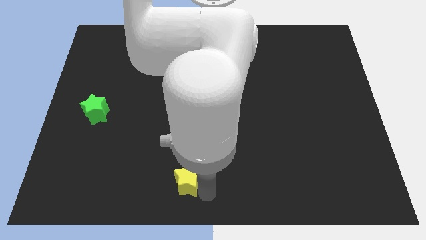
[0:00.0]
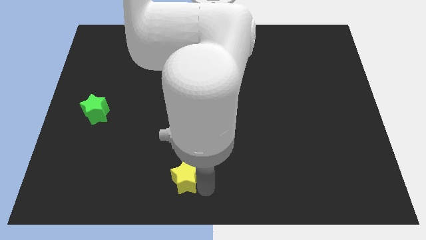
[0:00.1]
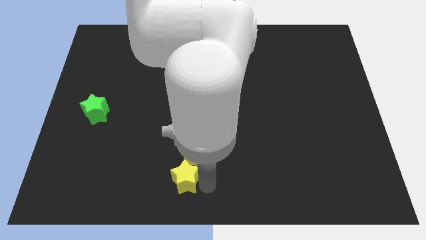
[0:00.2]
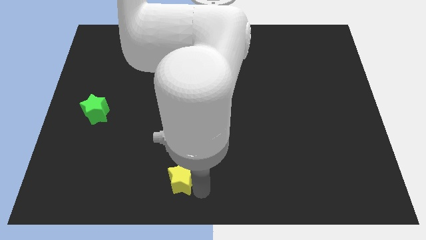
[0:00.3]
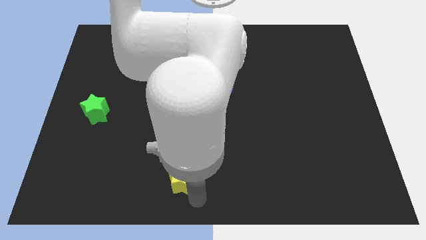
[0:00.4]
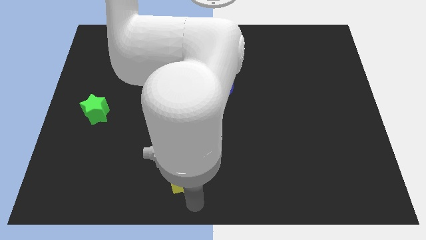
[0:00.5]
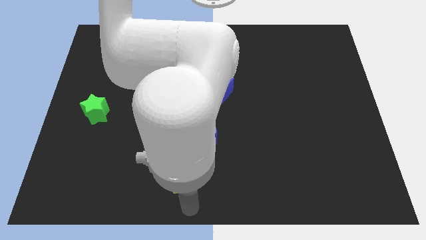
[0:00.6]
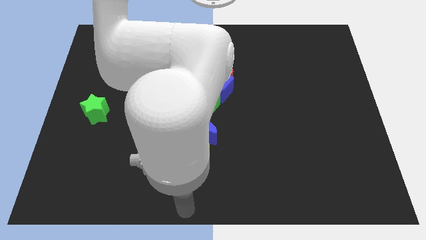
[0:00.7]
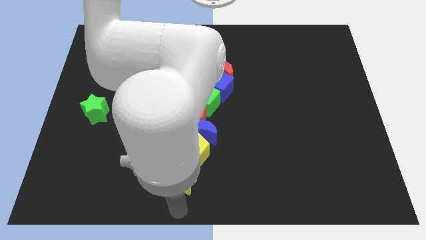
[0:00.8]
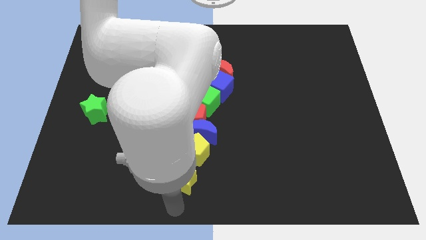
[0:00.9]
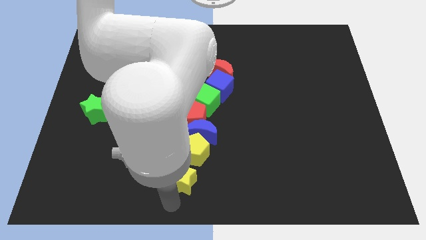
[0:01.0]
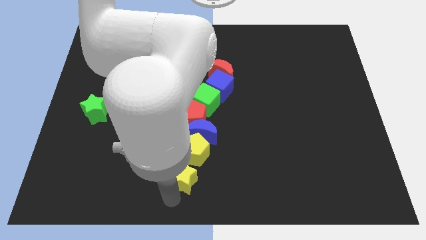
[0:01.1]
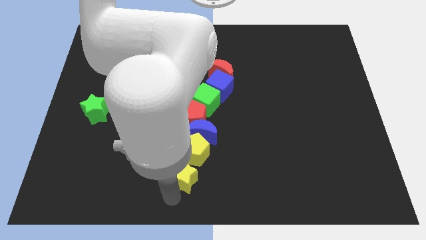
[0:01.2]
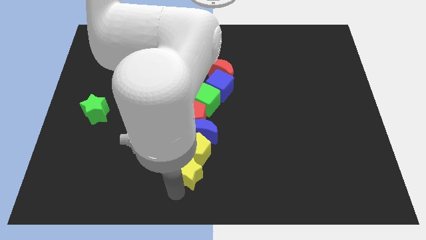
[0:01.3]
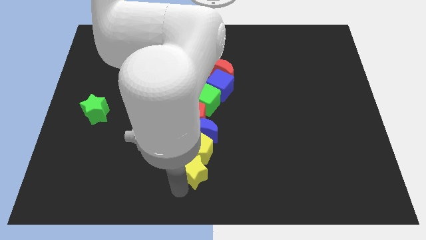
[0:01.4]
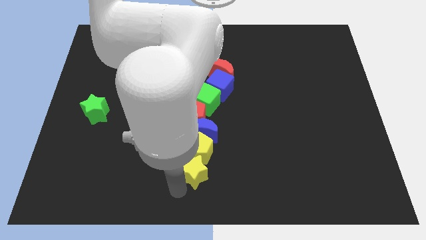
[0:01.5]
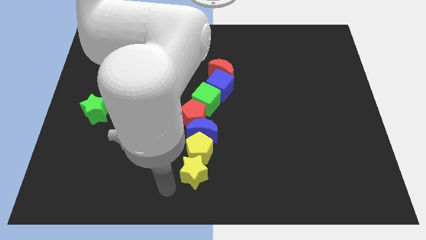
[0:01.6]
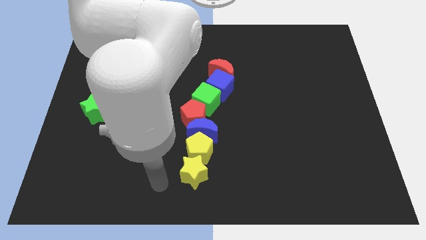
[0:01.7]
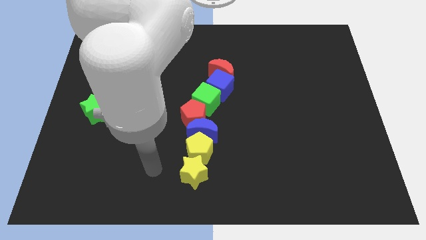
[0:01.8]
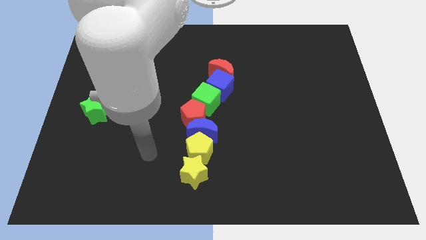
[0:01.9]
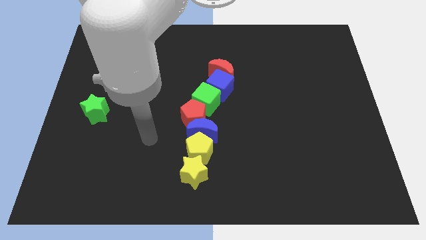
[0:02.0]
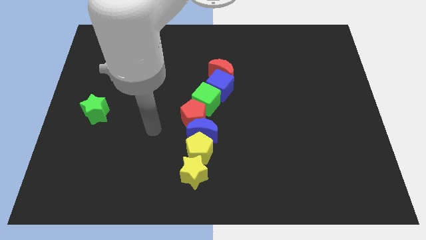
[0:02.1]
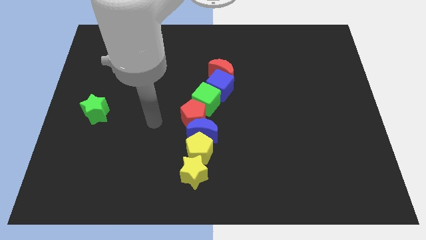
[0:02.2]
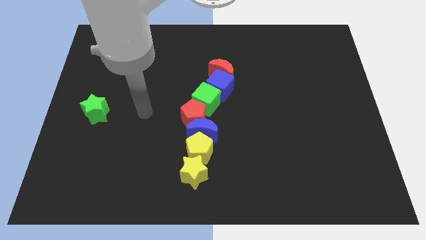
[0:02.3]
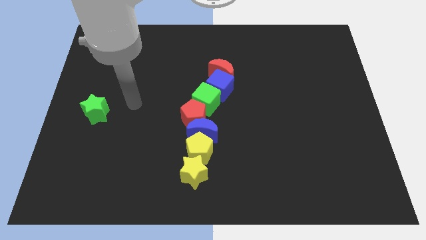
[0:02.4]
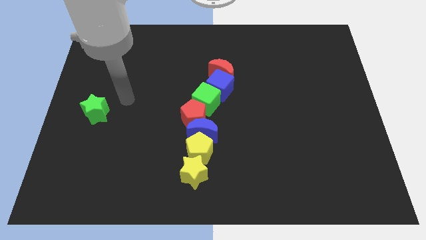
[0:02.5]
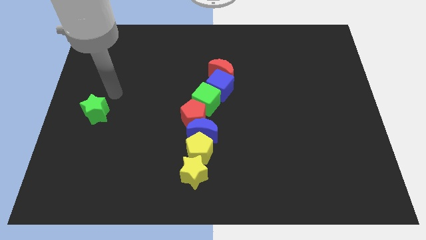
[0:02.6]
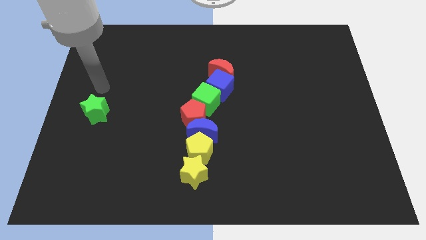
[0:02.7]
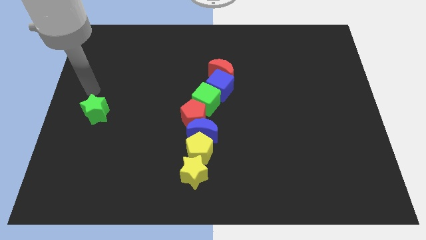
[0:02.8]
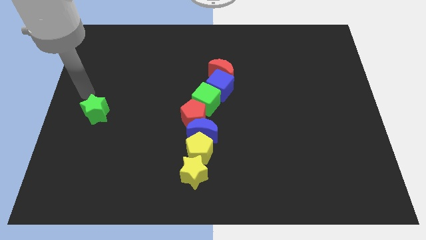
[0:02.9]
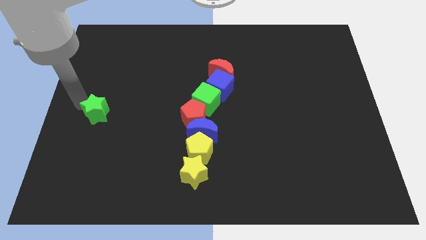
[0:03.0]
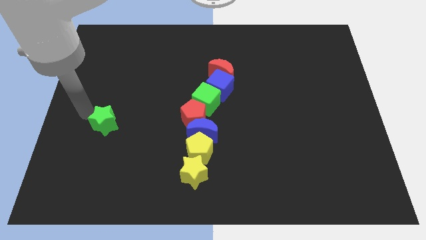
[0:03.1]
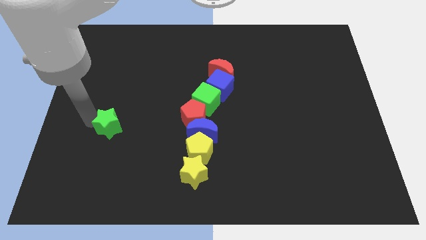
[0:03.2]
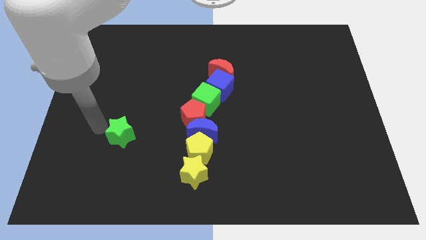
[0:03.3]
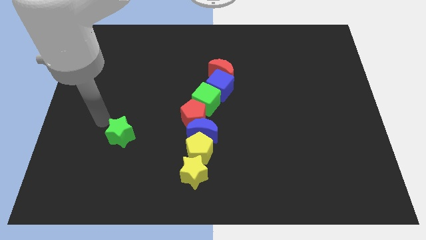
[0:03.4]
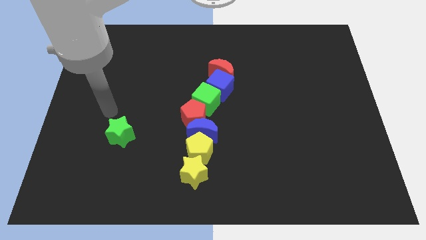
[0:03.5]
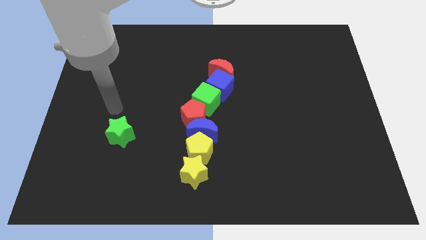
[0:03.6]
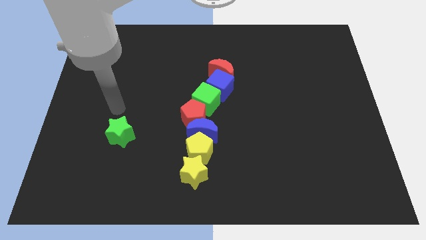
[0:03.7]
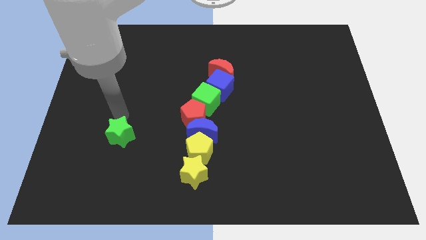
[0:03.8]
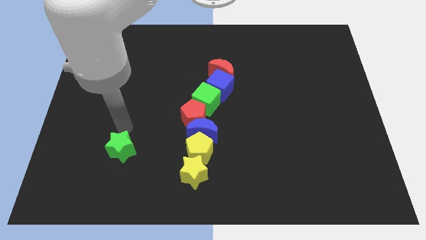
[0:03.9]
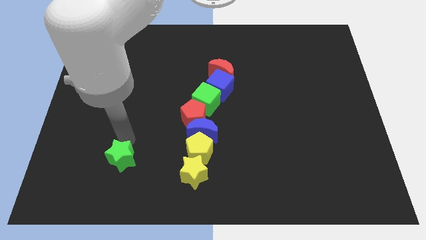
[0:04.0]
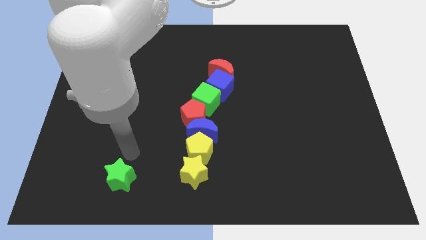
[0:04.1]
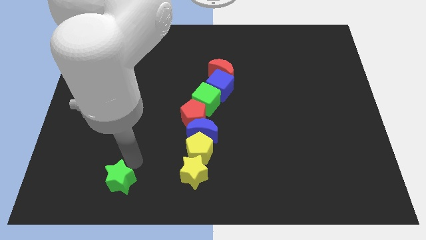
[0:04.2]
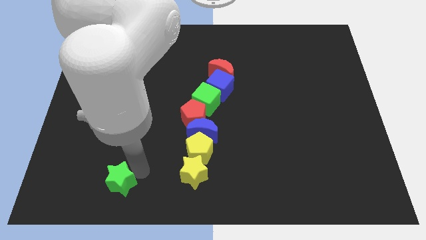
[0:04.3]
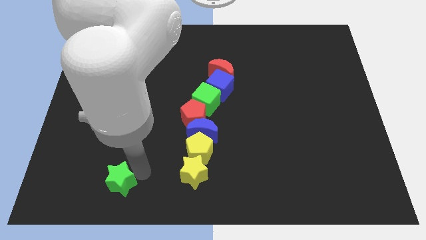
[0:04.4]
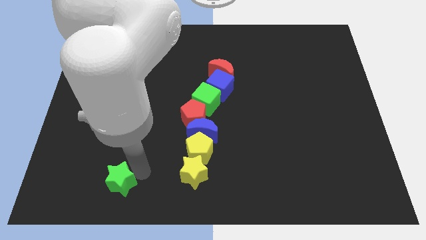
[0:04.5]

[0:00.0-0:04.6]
push the green star to the left side of the yellow star

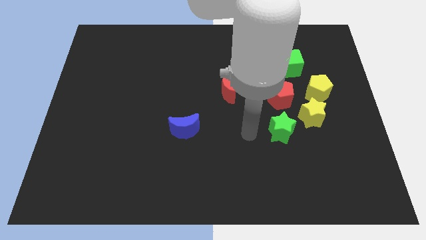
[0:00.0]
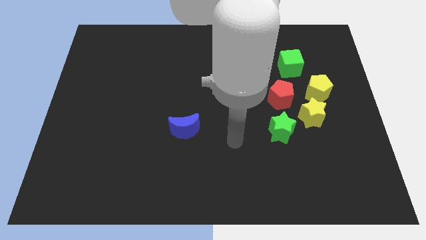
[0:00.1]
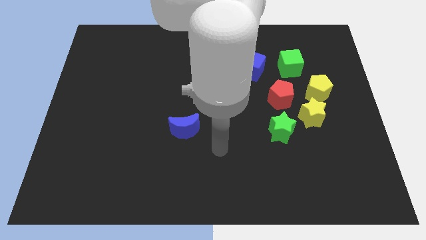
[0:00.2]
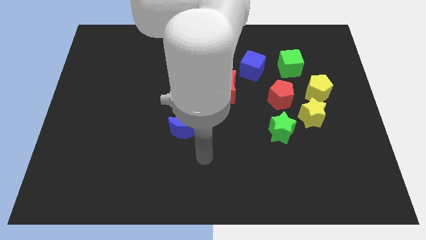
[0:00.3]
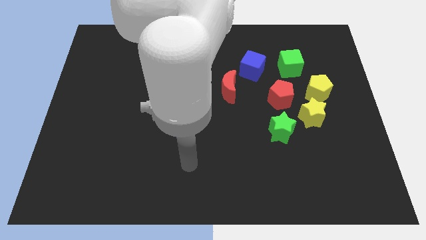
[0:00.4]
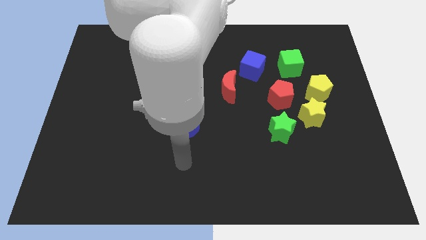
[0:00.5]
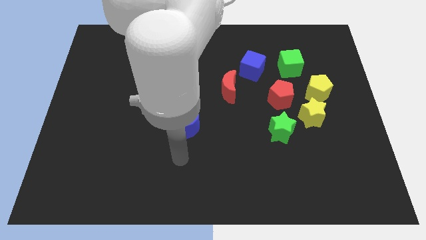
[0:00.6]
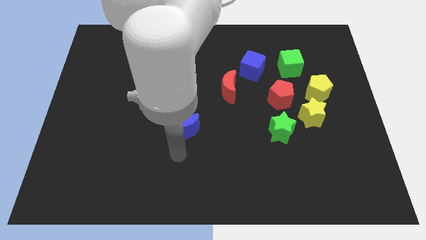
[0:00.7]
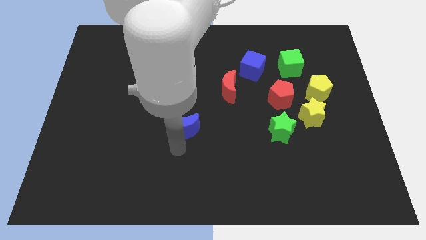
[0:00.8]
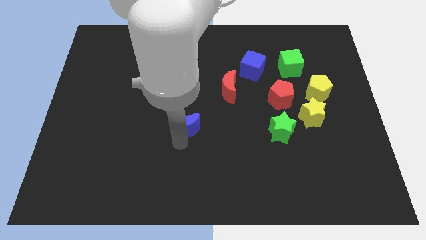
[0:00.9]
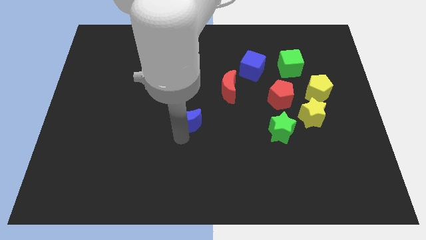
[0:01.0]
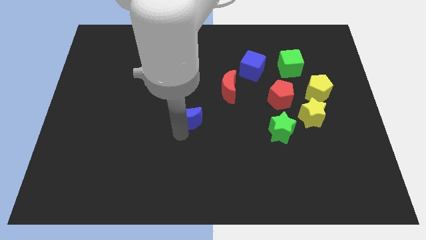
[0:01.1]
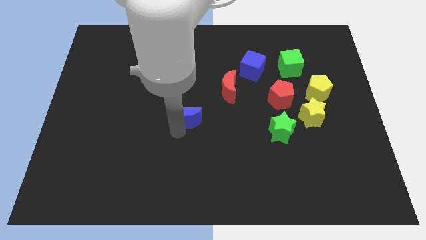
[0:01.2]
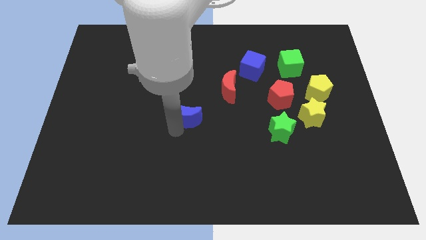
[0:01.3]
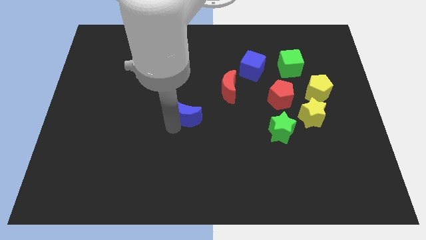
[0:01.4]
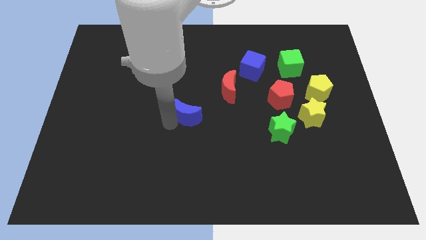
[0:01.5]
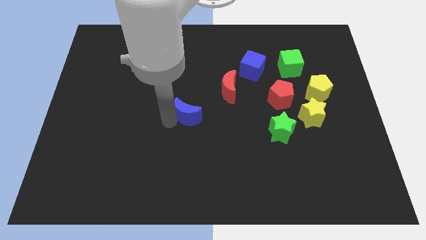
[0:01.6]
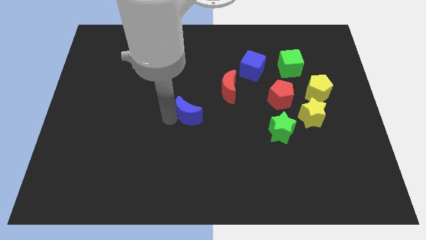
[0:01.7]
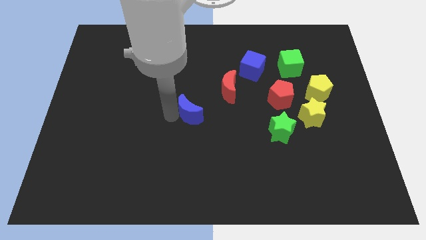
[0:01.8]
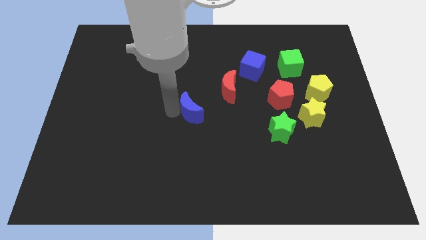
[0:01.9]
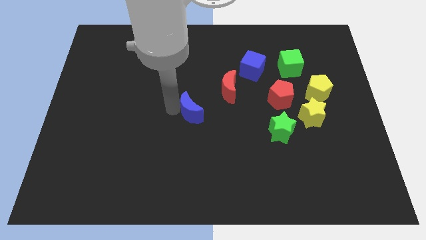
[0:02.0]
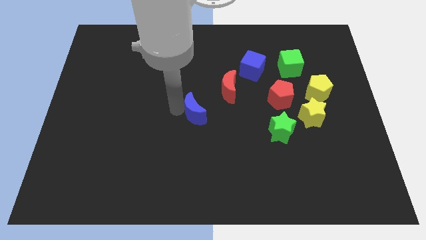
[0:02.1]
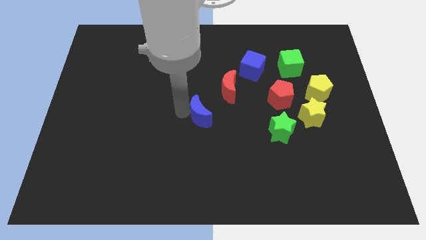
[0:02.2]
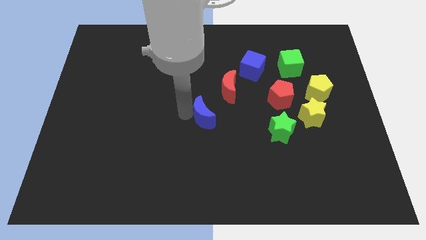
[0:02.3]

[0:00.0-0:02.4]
push blue moon slightly upwards

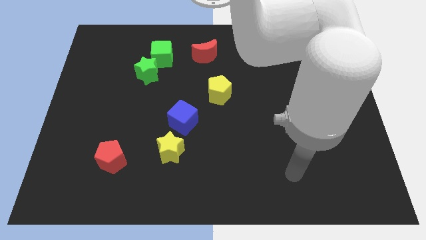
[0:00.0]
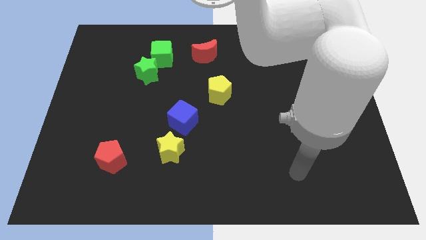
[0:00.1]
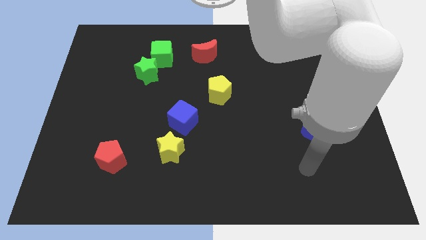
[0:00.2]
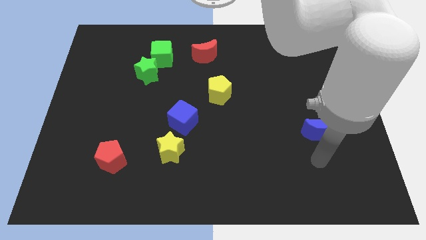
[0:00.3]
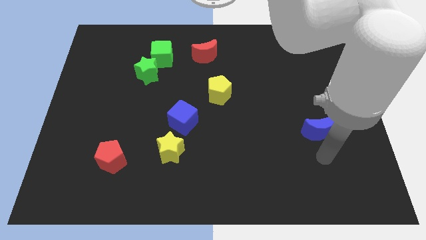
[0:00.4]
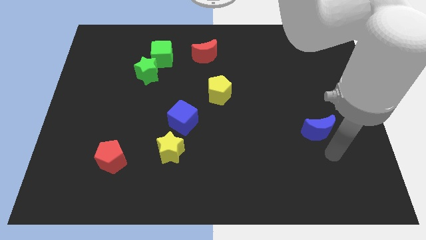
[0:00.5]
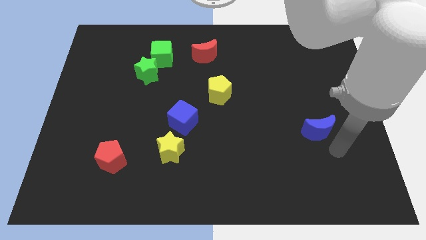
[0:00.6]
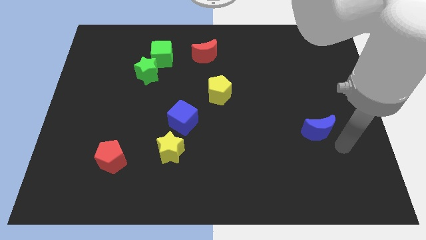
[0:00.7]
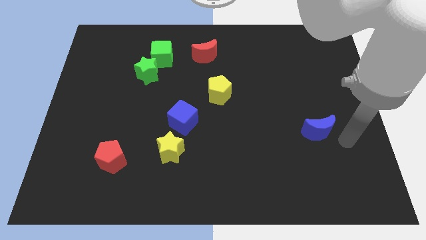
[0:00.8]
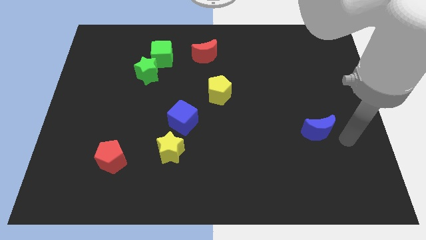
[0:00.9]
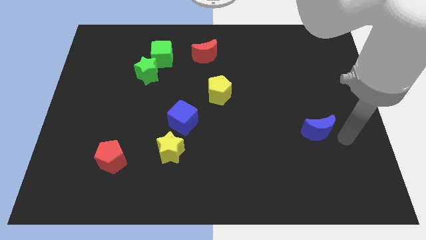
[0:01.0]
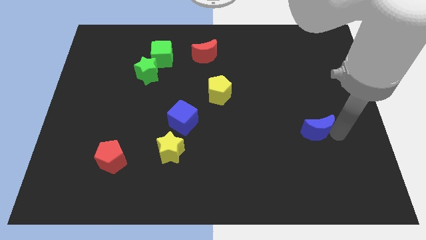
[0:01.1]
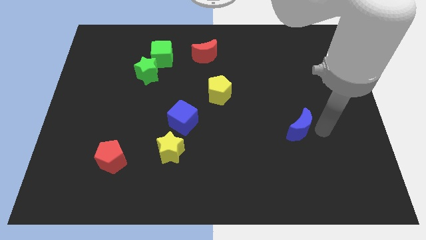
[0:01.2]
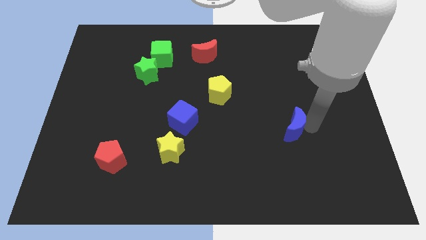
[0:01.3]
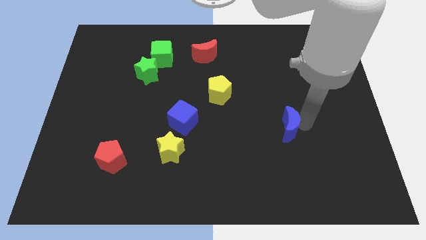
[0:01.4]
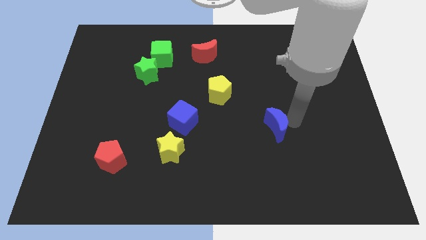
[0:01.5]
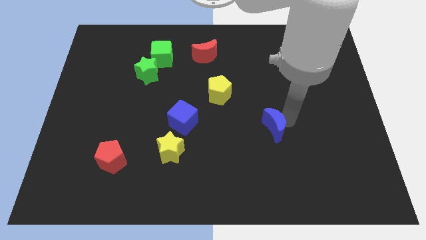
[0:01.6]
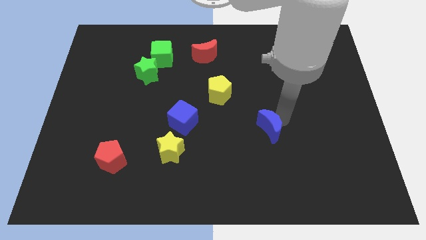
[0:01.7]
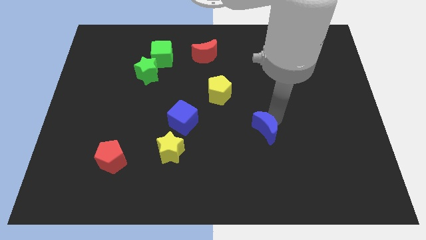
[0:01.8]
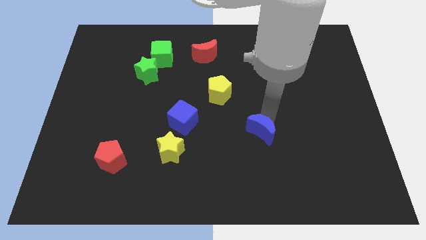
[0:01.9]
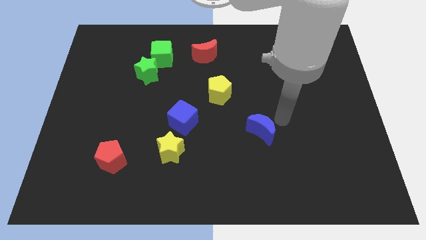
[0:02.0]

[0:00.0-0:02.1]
move the blue crescent towards the center of the board
